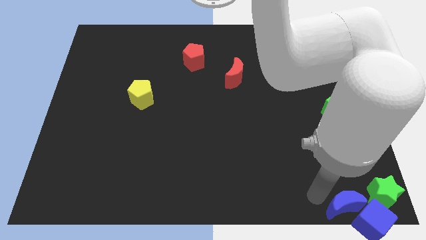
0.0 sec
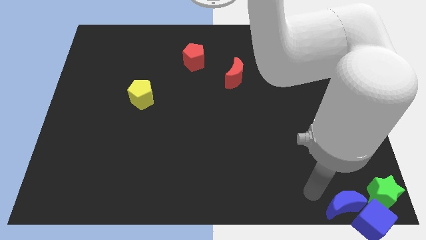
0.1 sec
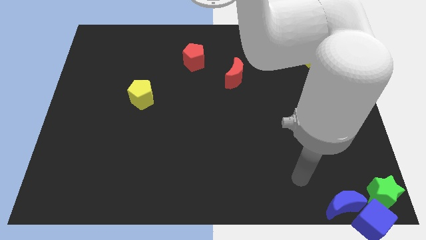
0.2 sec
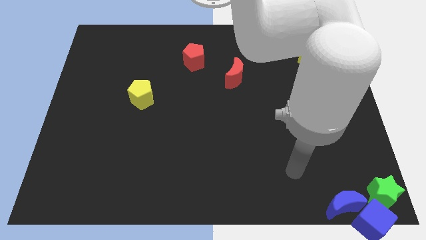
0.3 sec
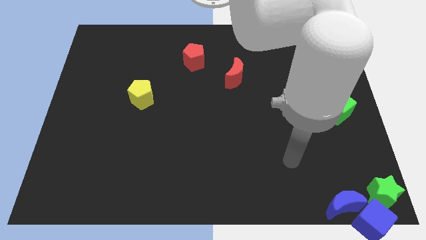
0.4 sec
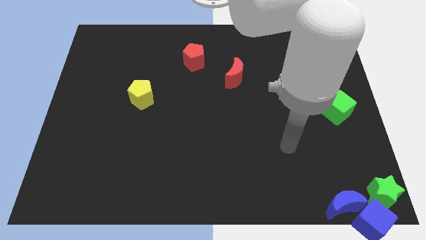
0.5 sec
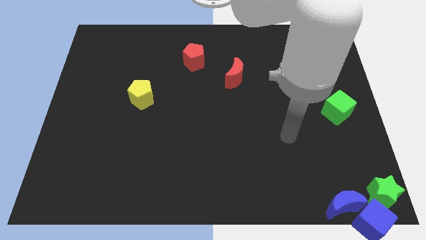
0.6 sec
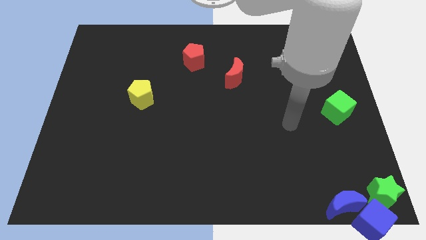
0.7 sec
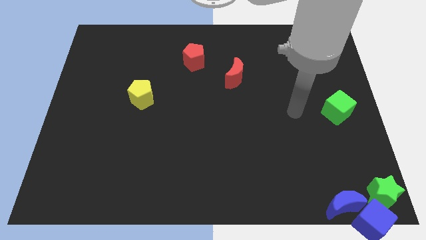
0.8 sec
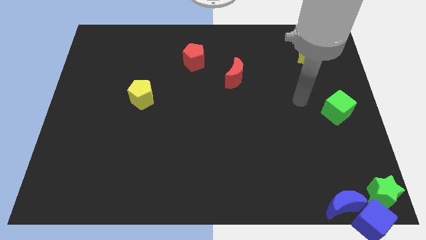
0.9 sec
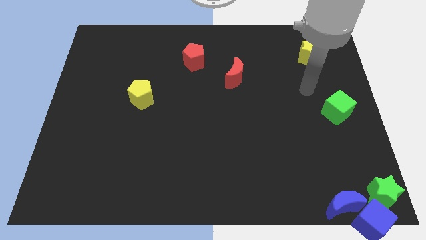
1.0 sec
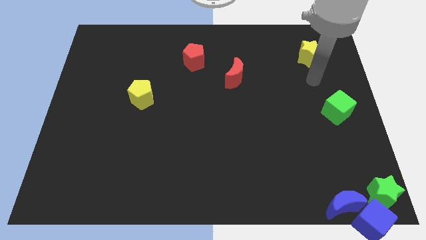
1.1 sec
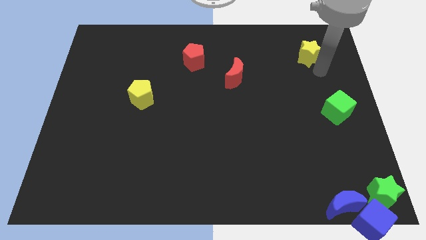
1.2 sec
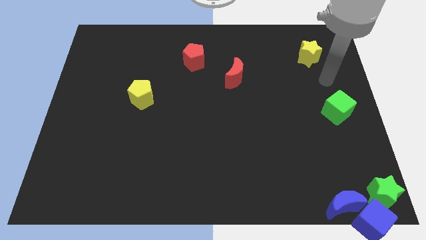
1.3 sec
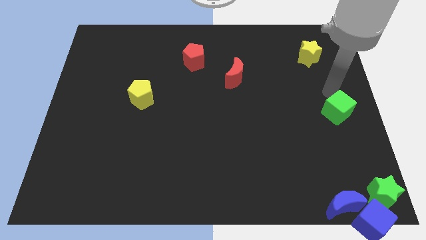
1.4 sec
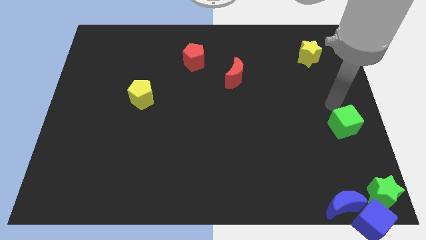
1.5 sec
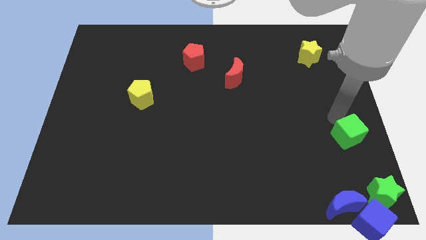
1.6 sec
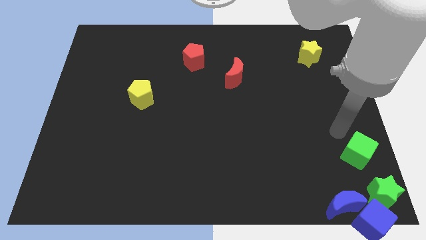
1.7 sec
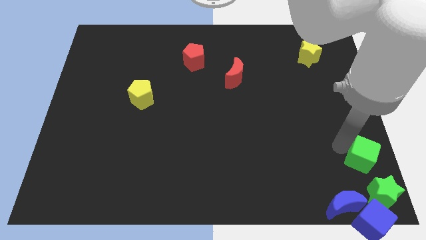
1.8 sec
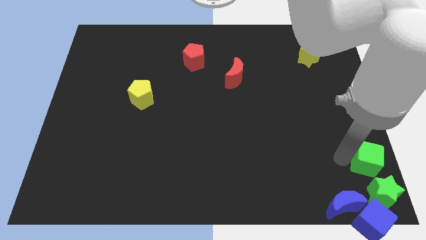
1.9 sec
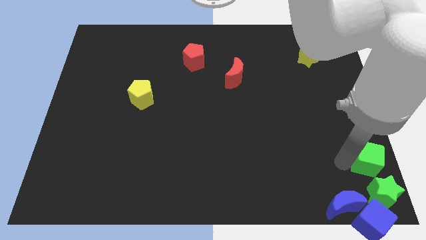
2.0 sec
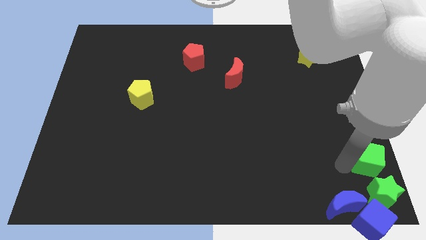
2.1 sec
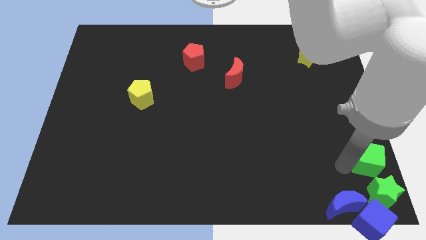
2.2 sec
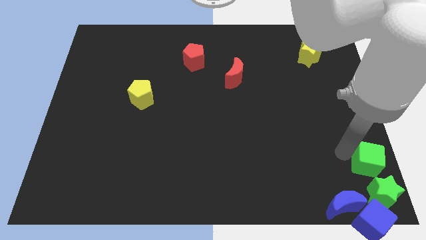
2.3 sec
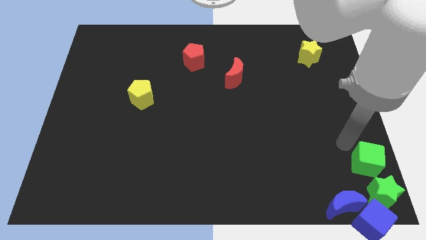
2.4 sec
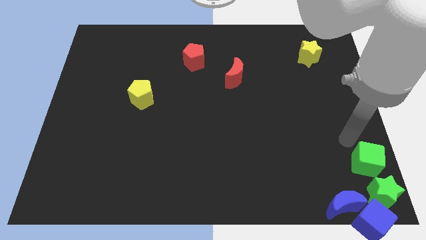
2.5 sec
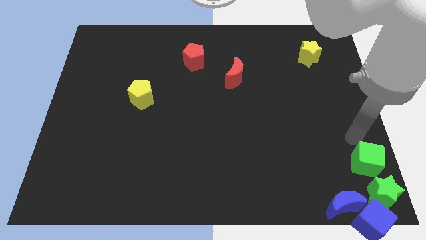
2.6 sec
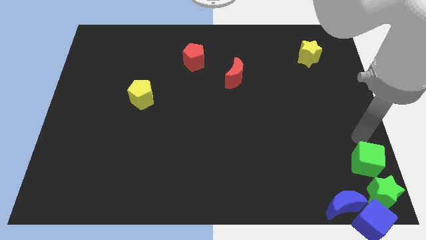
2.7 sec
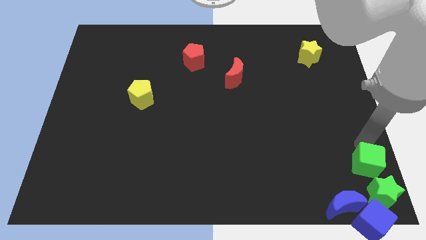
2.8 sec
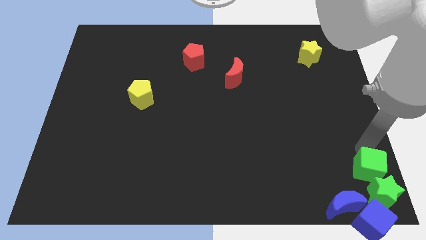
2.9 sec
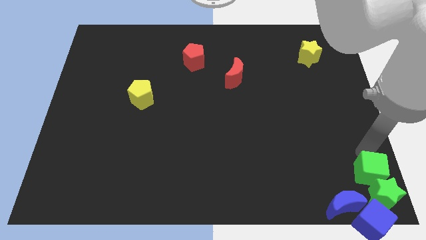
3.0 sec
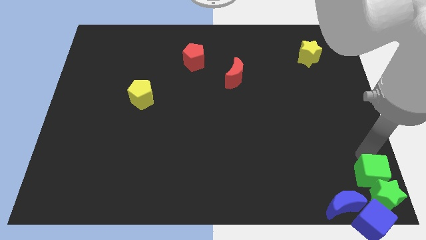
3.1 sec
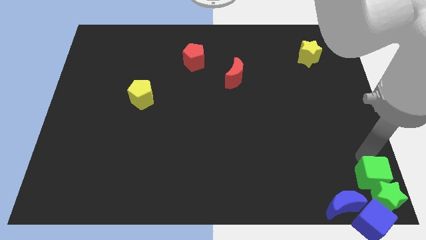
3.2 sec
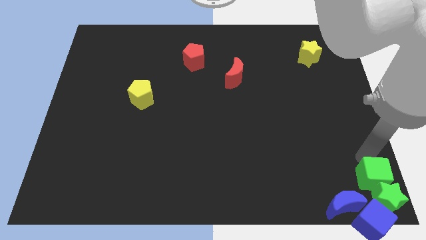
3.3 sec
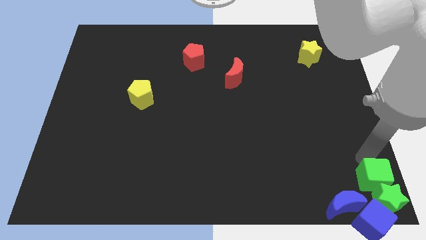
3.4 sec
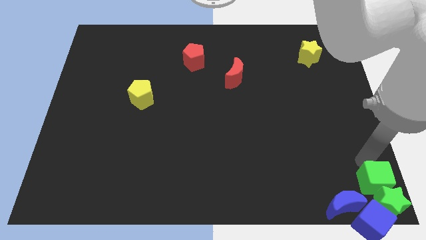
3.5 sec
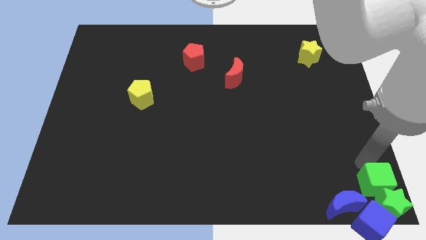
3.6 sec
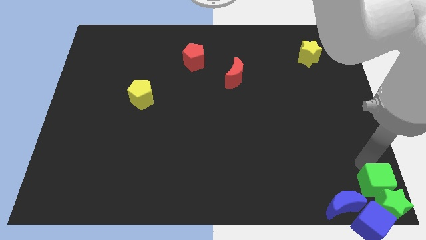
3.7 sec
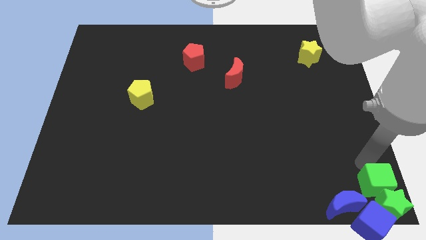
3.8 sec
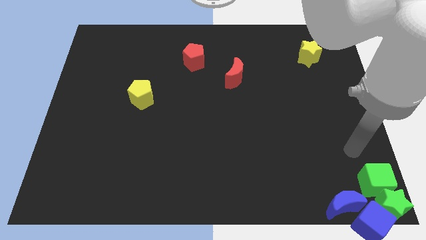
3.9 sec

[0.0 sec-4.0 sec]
move the green cube to the top left side of the green star

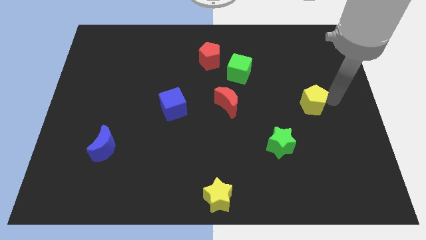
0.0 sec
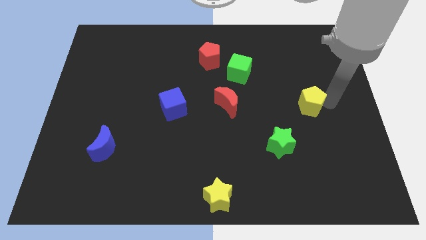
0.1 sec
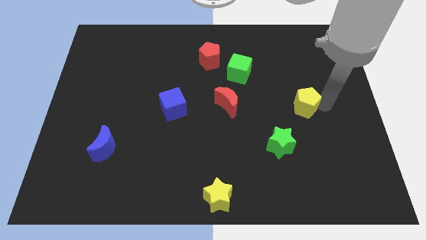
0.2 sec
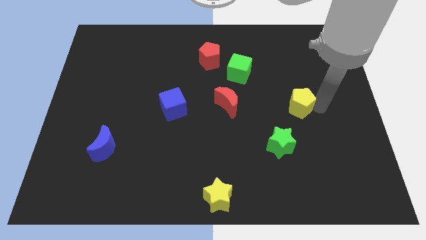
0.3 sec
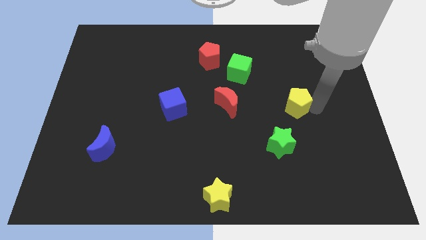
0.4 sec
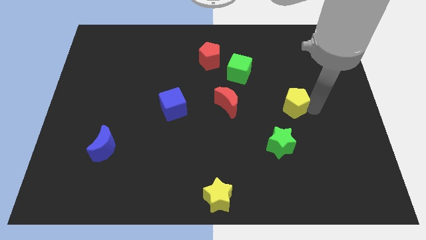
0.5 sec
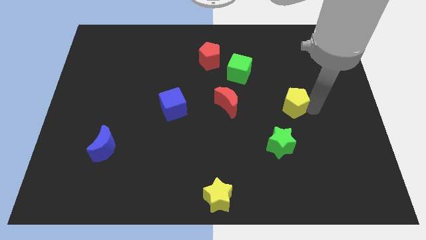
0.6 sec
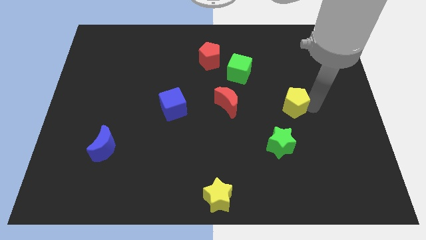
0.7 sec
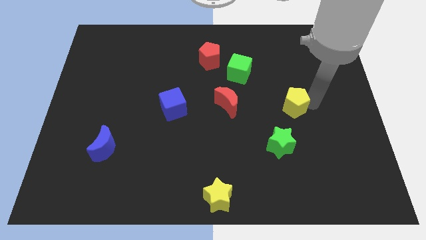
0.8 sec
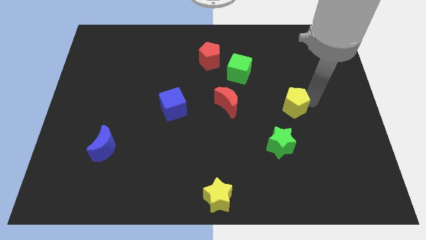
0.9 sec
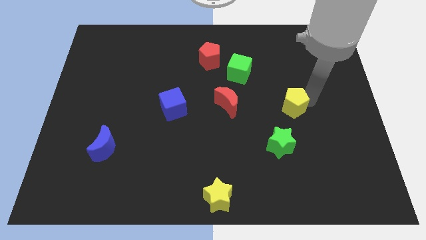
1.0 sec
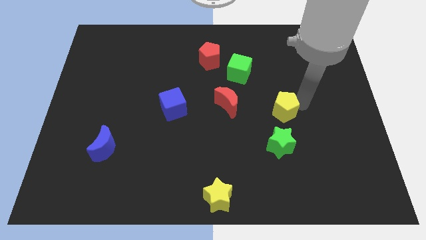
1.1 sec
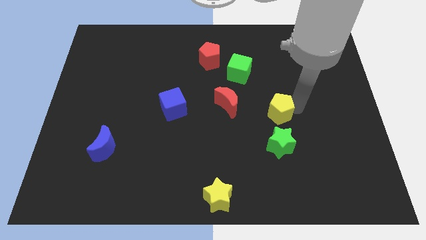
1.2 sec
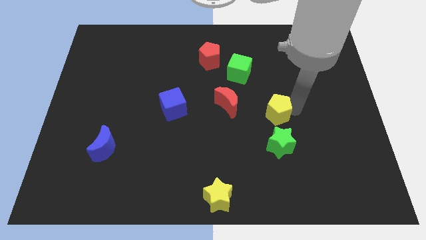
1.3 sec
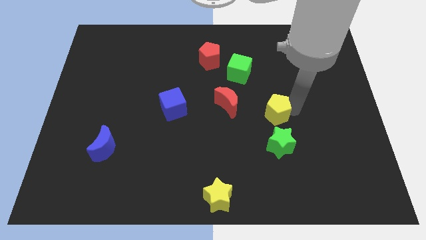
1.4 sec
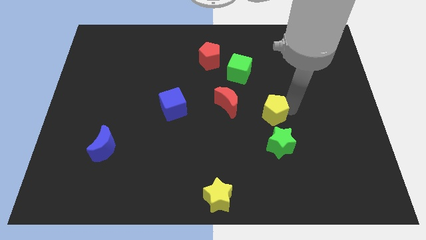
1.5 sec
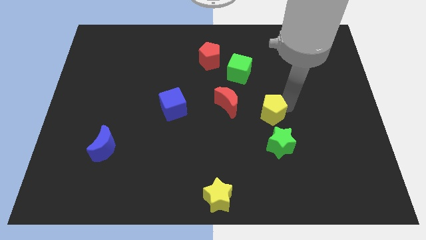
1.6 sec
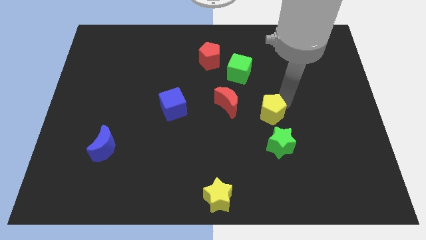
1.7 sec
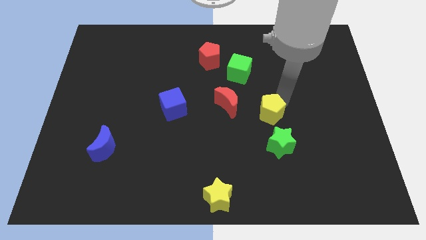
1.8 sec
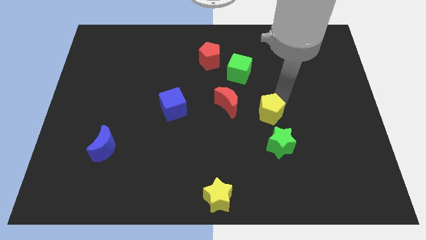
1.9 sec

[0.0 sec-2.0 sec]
place the yellow pentagon on top of the green star

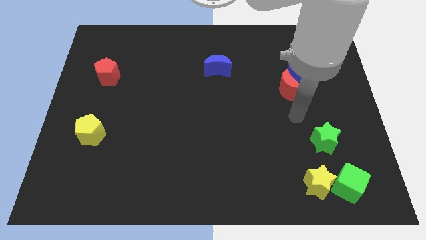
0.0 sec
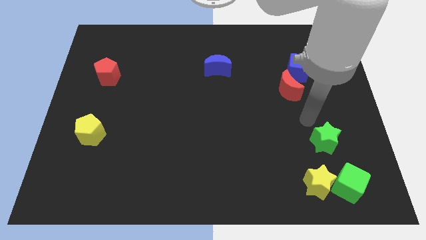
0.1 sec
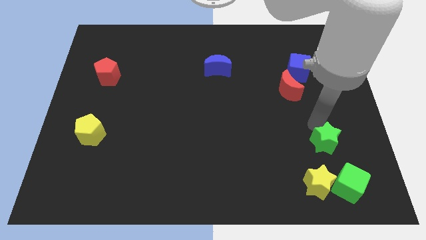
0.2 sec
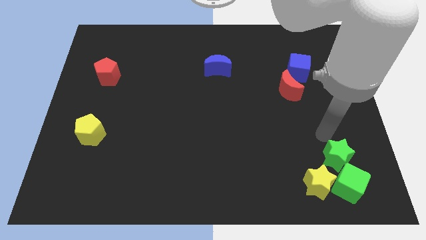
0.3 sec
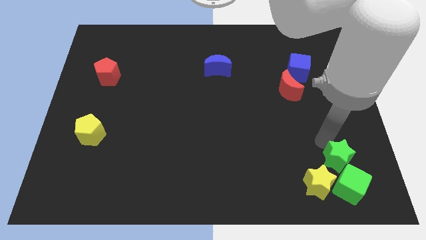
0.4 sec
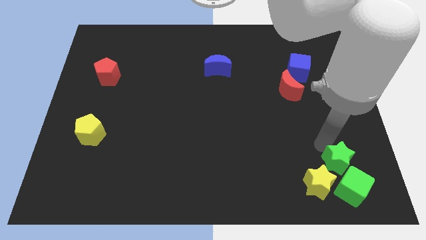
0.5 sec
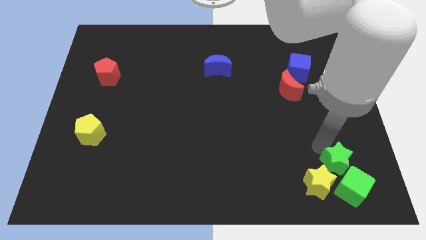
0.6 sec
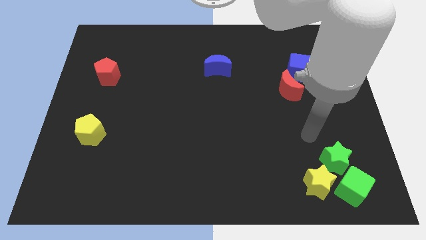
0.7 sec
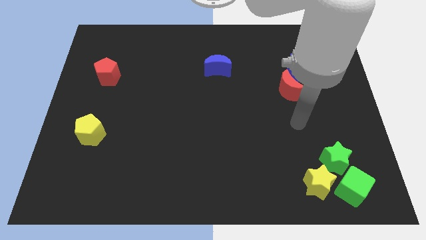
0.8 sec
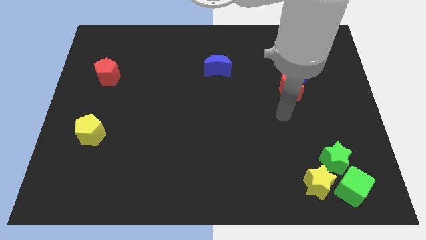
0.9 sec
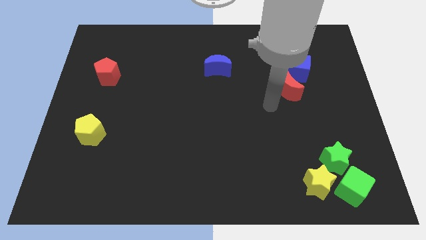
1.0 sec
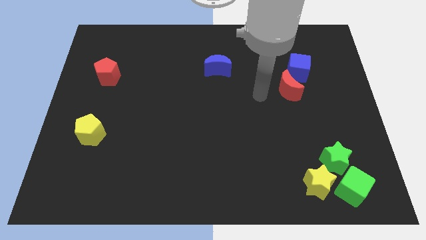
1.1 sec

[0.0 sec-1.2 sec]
push the green star into the green cube

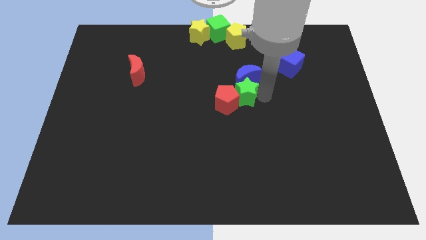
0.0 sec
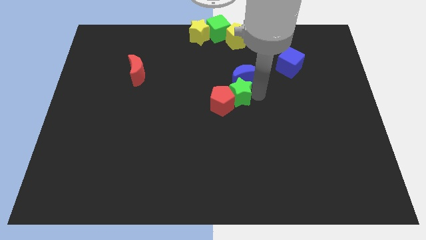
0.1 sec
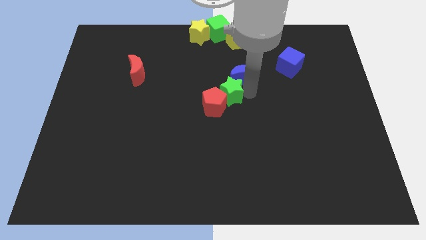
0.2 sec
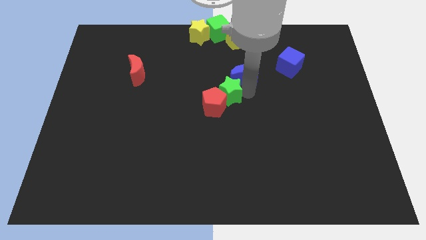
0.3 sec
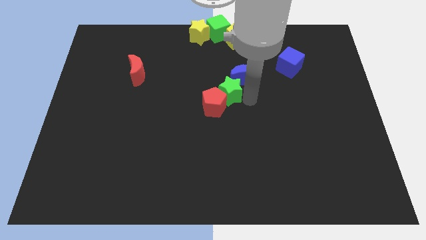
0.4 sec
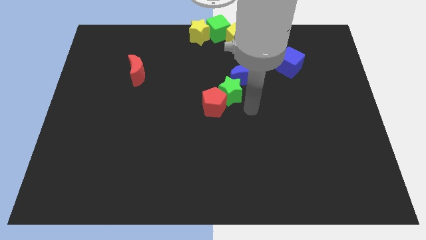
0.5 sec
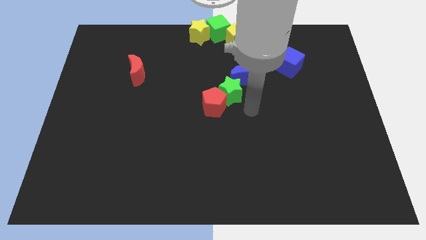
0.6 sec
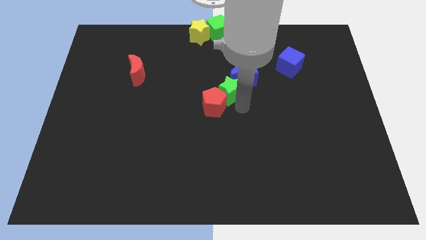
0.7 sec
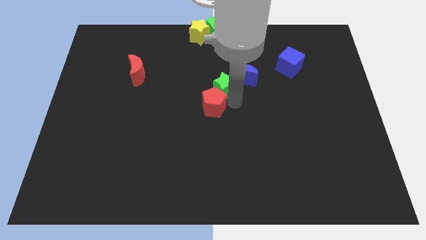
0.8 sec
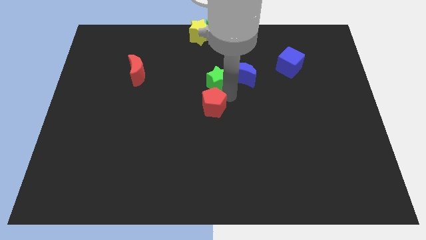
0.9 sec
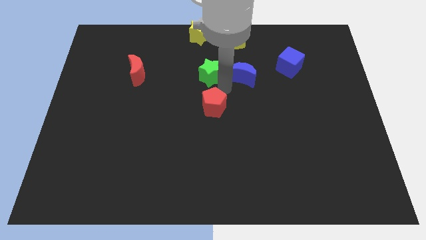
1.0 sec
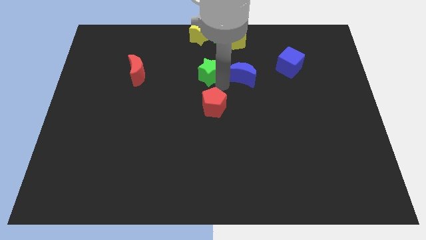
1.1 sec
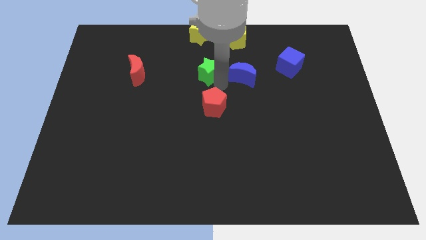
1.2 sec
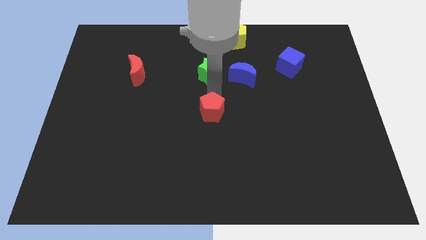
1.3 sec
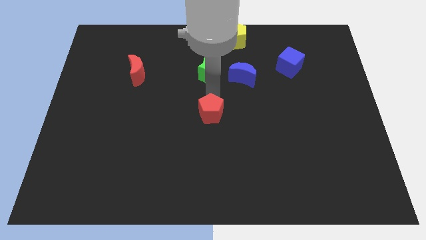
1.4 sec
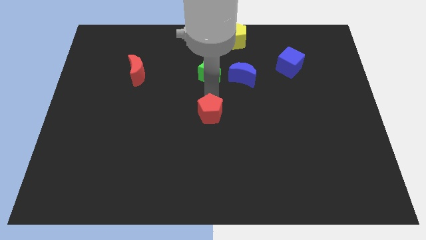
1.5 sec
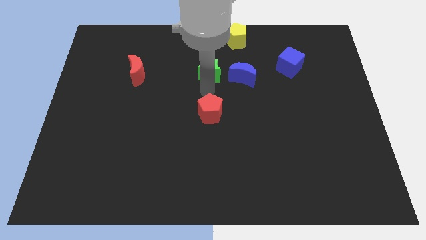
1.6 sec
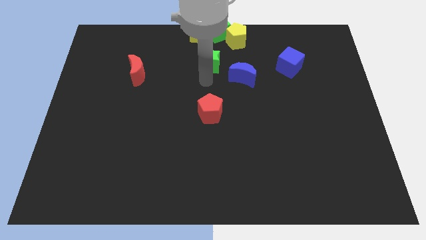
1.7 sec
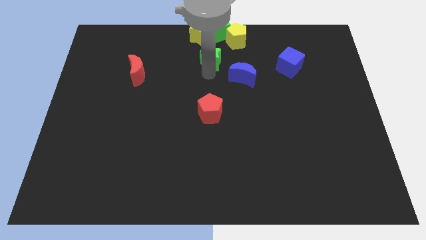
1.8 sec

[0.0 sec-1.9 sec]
place the green star vertically below the green cube
